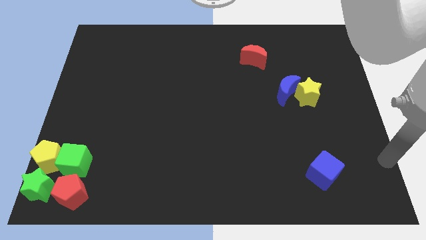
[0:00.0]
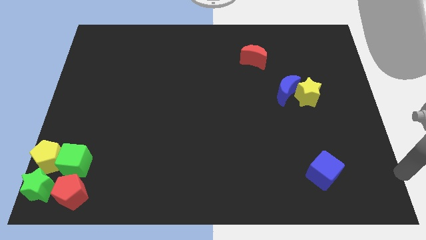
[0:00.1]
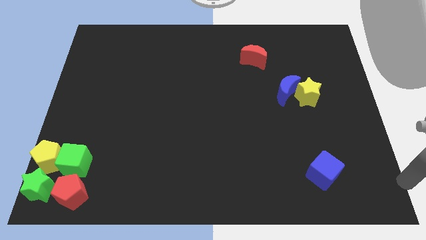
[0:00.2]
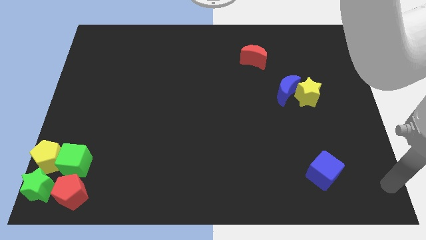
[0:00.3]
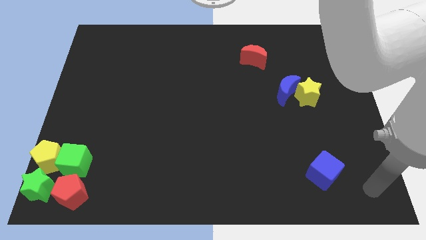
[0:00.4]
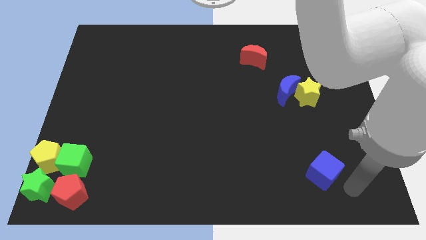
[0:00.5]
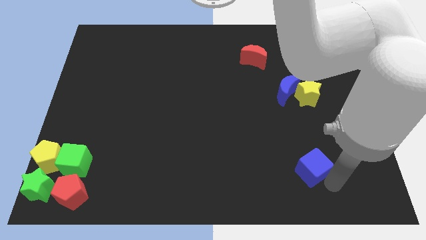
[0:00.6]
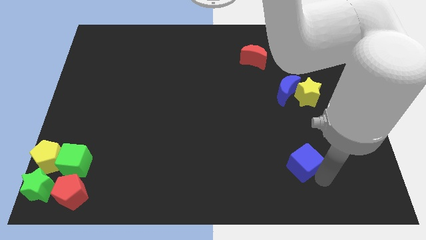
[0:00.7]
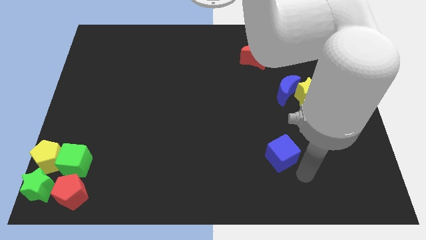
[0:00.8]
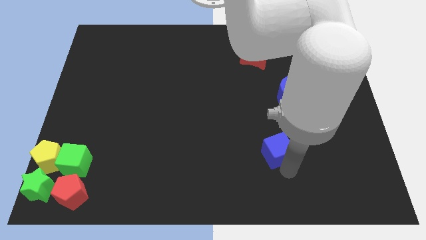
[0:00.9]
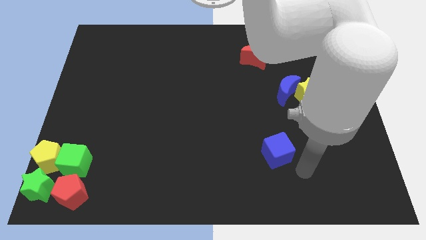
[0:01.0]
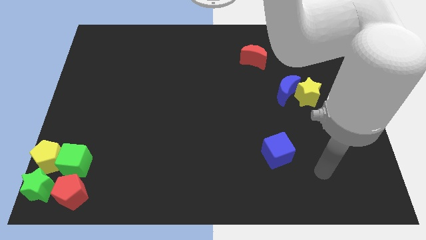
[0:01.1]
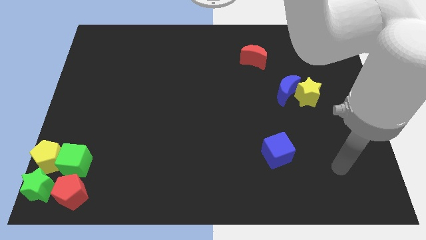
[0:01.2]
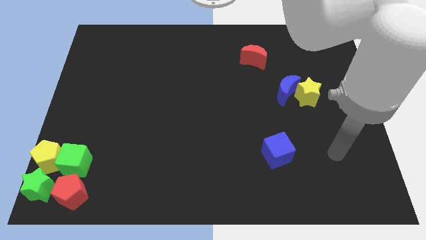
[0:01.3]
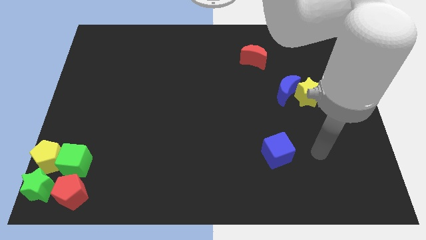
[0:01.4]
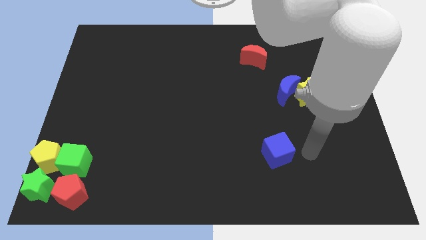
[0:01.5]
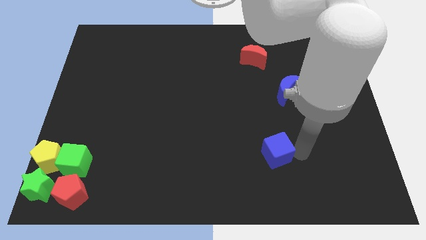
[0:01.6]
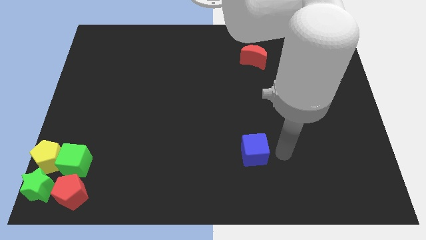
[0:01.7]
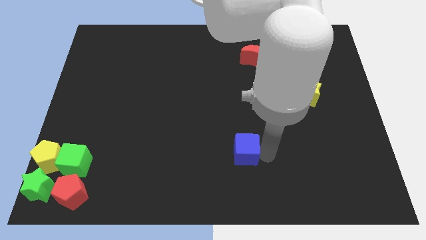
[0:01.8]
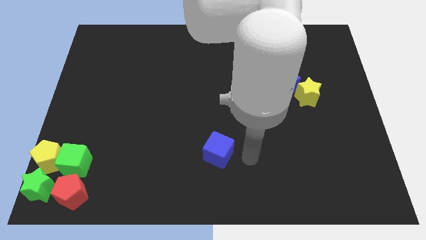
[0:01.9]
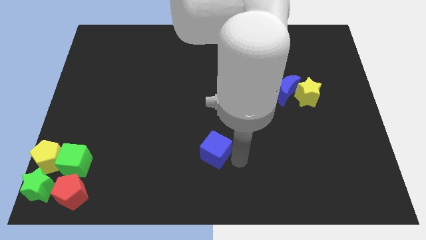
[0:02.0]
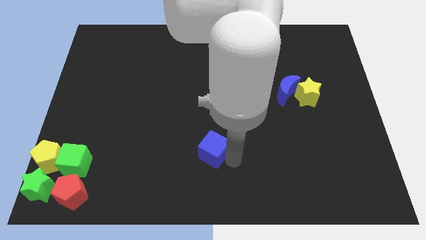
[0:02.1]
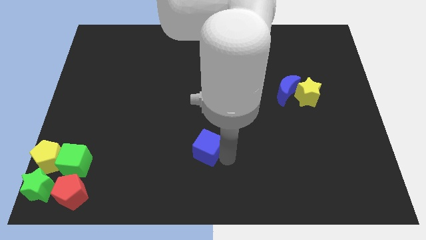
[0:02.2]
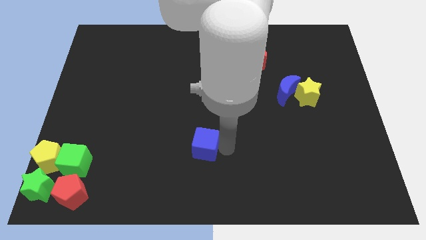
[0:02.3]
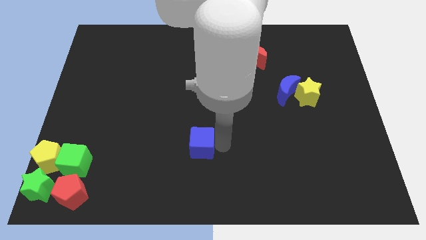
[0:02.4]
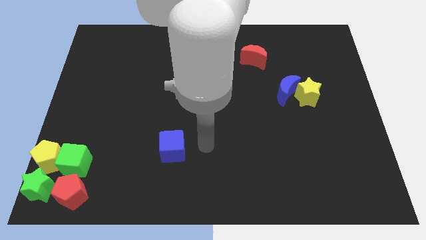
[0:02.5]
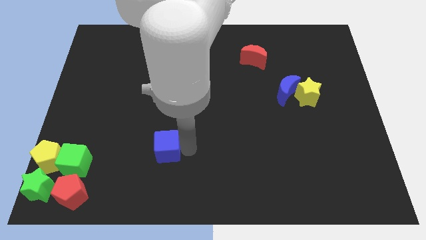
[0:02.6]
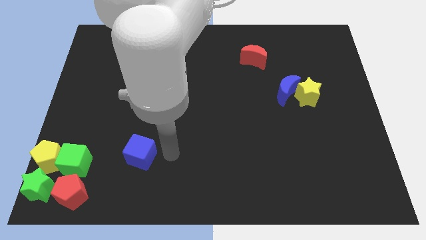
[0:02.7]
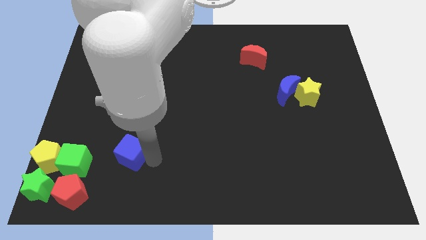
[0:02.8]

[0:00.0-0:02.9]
place the blue cube diagonally to the red pentagon

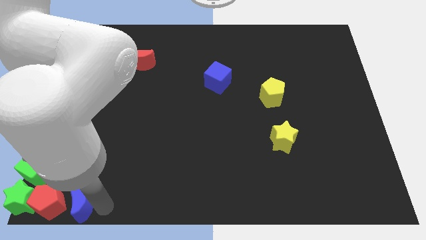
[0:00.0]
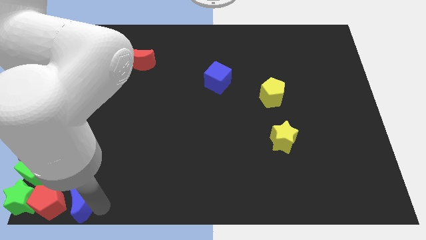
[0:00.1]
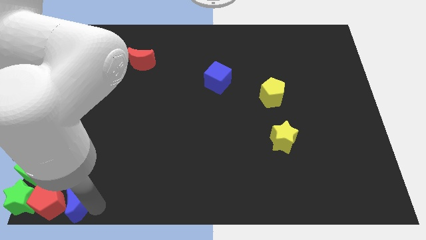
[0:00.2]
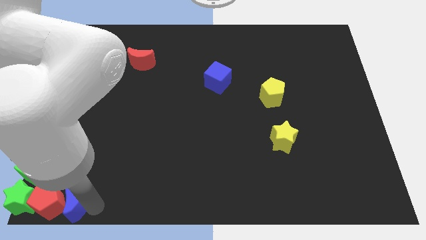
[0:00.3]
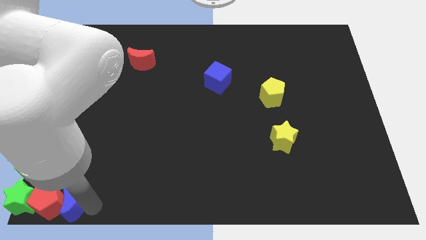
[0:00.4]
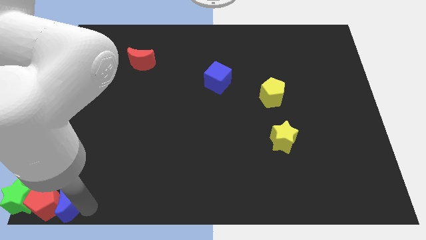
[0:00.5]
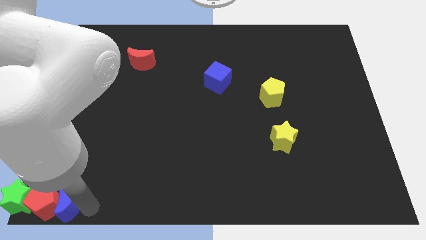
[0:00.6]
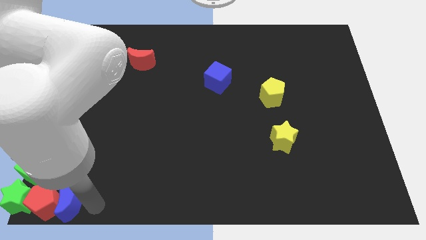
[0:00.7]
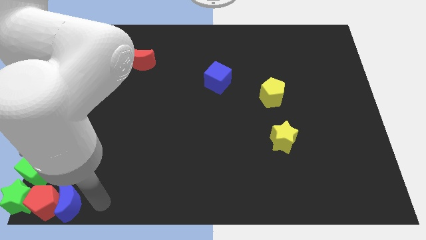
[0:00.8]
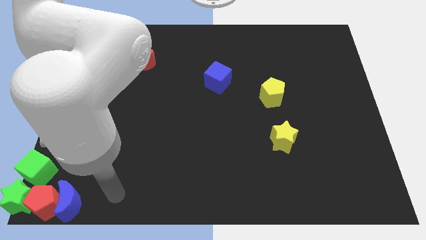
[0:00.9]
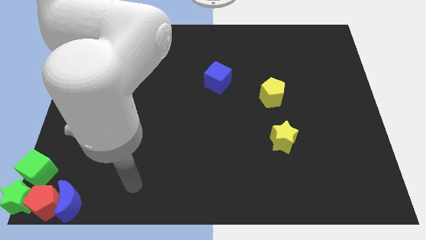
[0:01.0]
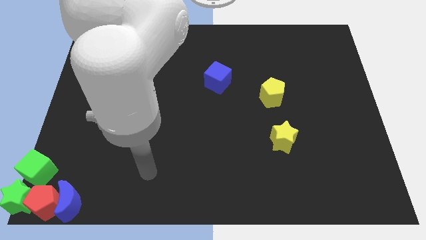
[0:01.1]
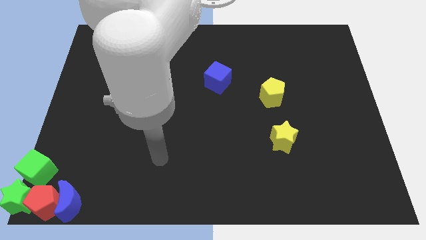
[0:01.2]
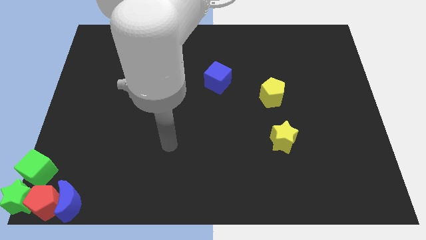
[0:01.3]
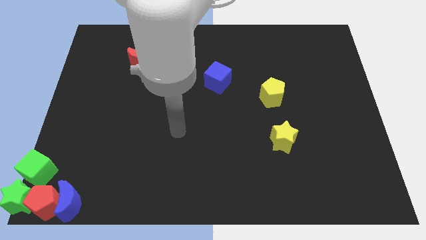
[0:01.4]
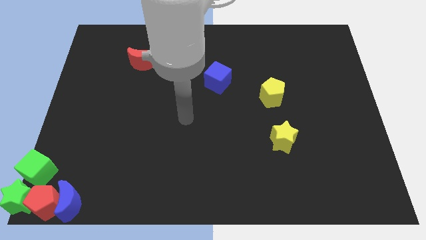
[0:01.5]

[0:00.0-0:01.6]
push the blue crescent into the red pentagon

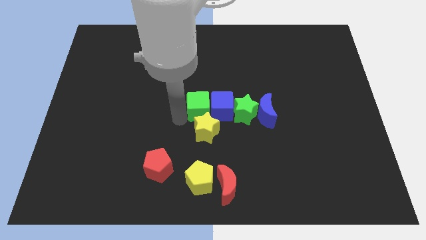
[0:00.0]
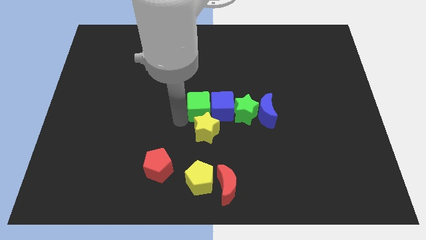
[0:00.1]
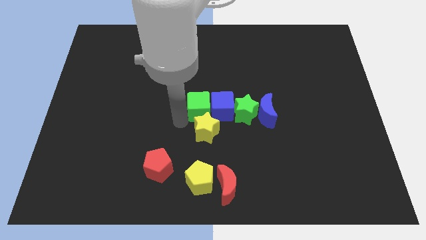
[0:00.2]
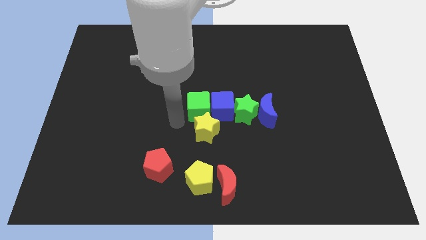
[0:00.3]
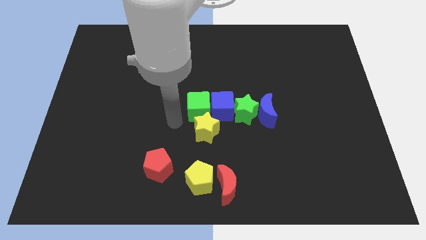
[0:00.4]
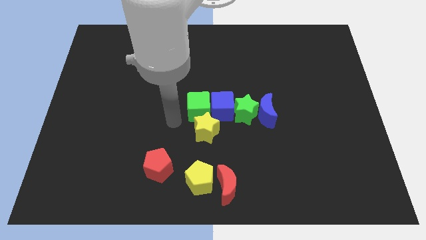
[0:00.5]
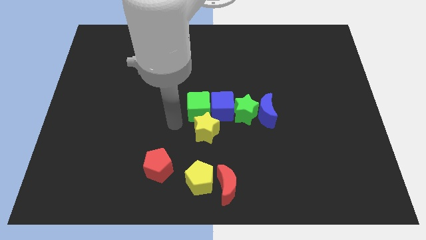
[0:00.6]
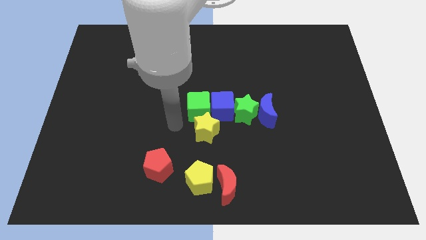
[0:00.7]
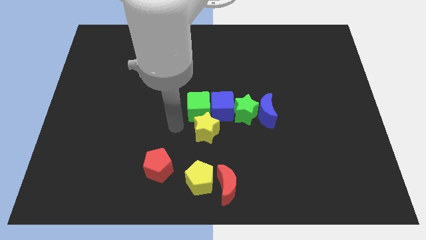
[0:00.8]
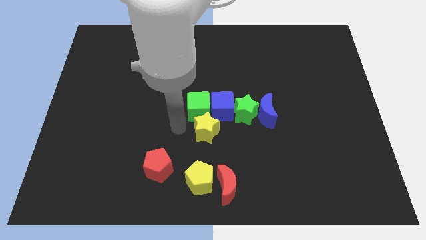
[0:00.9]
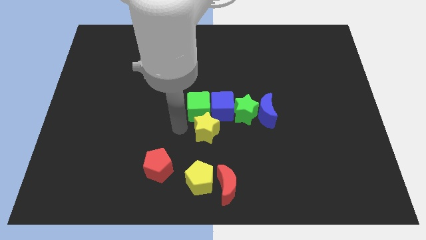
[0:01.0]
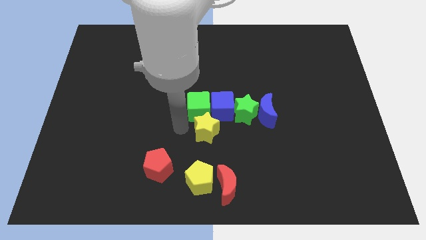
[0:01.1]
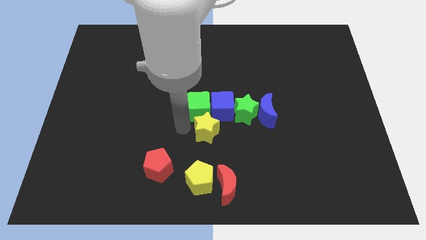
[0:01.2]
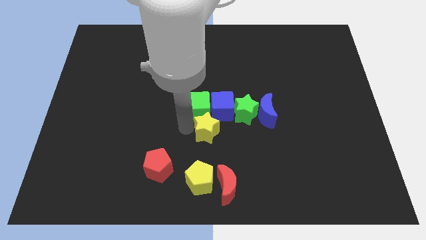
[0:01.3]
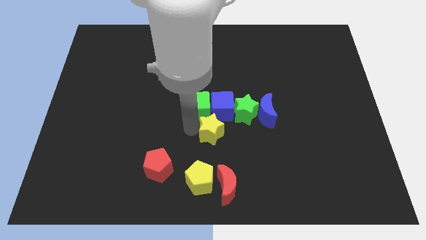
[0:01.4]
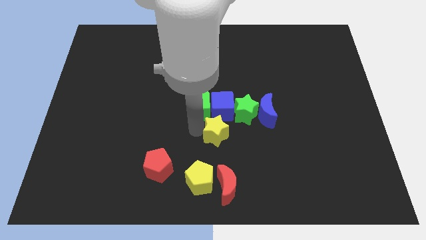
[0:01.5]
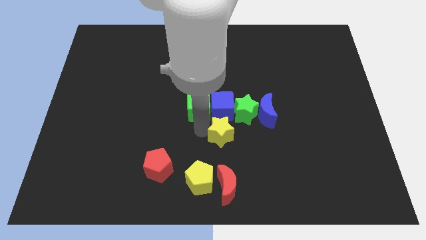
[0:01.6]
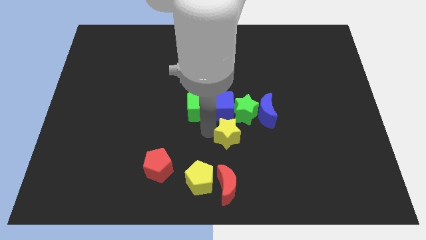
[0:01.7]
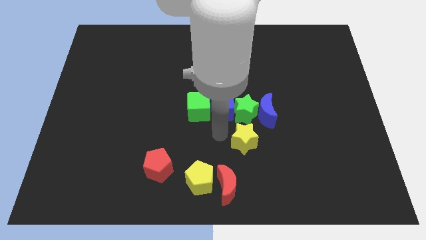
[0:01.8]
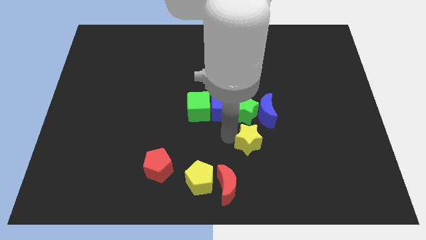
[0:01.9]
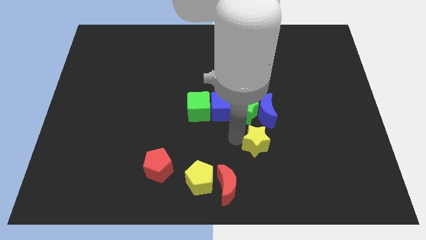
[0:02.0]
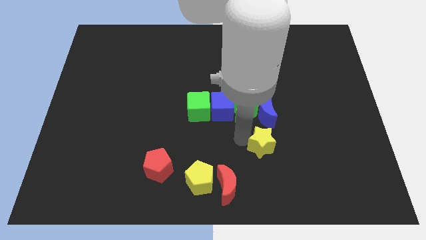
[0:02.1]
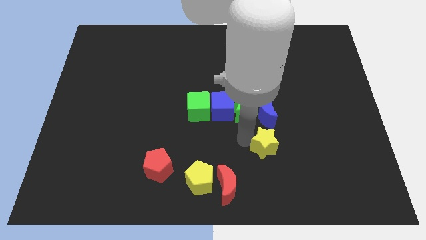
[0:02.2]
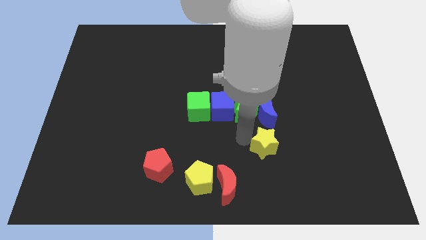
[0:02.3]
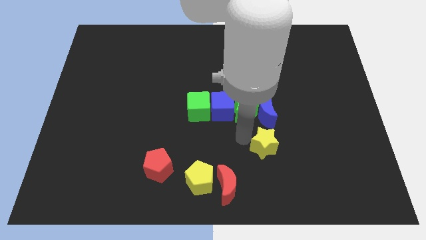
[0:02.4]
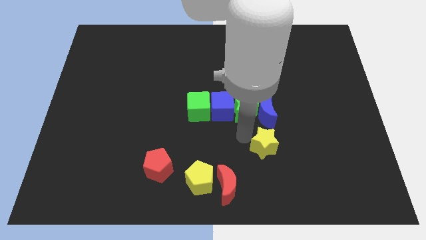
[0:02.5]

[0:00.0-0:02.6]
place the yellow star to the bottom of the blue crescent

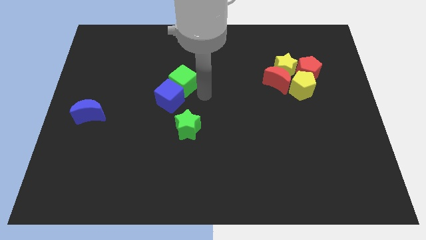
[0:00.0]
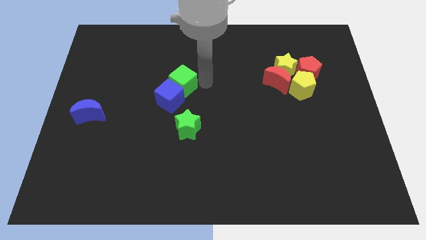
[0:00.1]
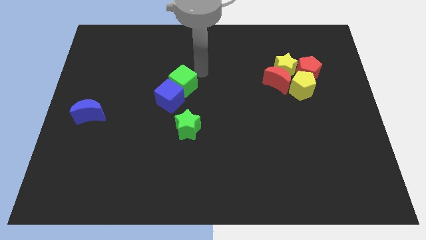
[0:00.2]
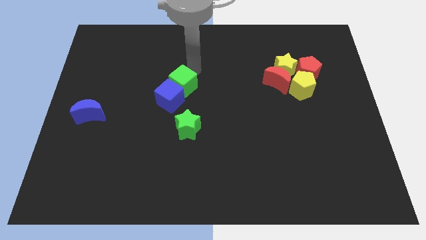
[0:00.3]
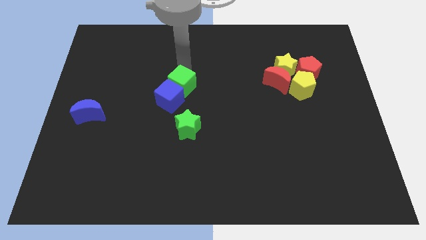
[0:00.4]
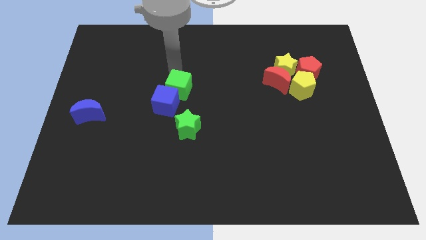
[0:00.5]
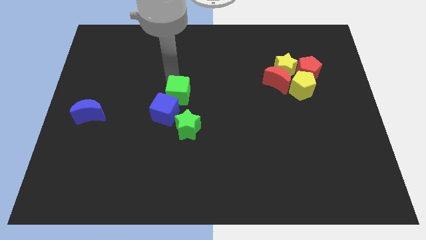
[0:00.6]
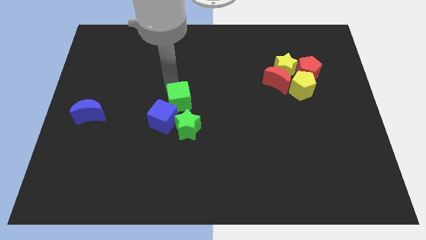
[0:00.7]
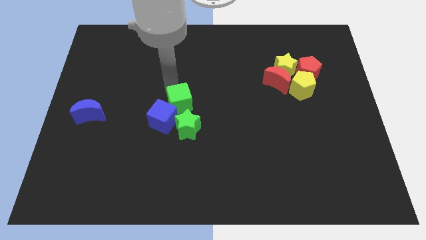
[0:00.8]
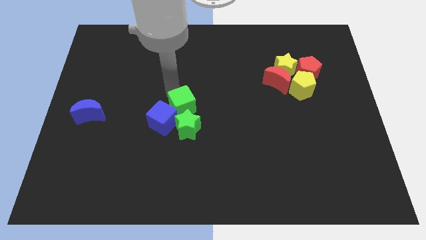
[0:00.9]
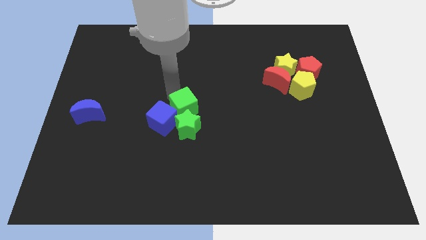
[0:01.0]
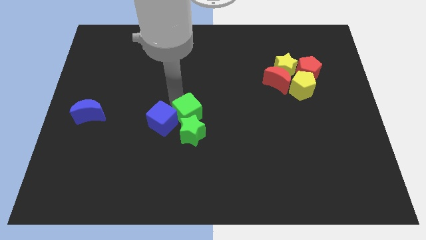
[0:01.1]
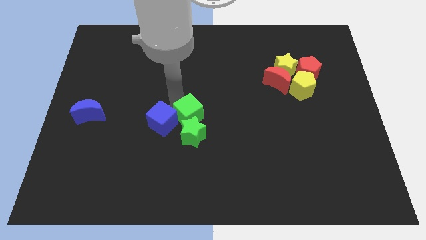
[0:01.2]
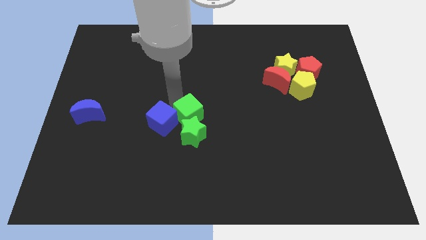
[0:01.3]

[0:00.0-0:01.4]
place green cube to the top of green star

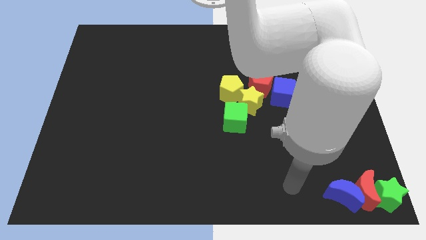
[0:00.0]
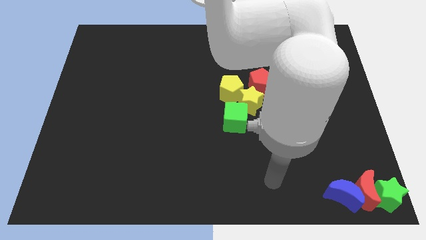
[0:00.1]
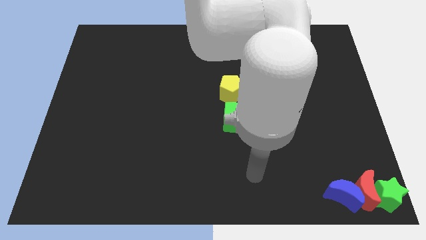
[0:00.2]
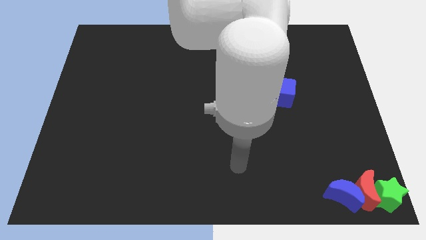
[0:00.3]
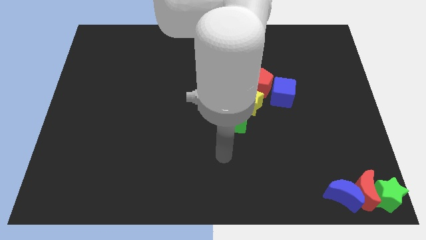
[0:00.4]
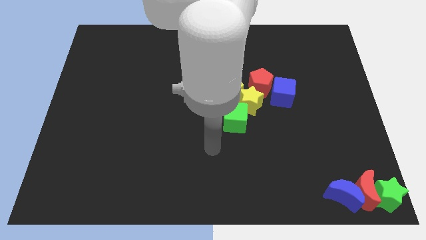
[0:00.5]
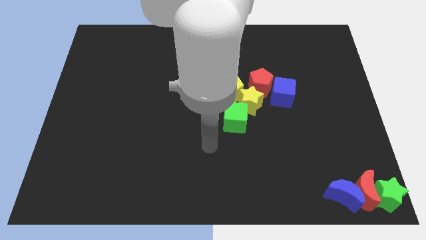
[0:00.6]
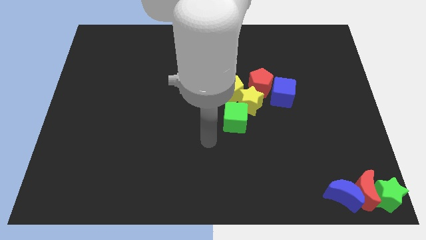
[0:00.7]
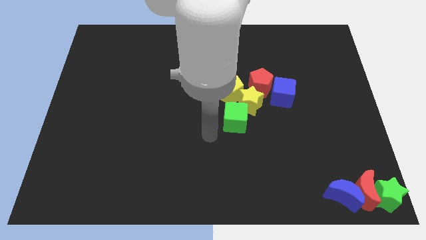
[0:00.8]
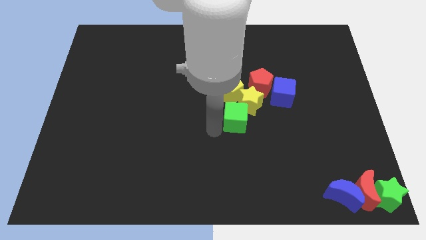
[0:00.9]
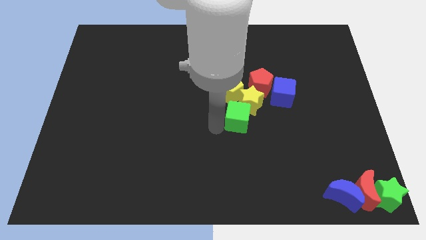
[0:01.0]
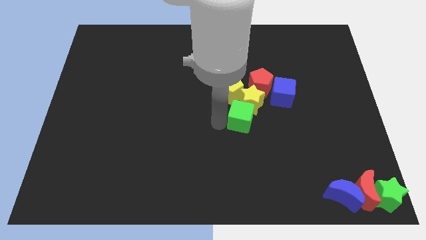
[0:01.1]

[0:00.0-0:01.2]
touch the bottom of green cube
